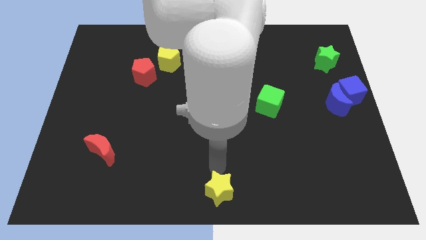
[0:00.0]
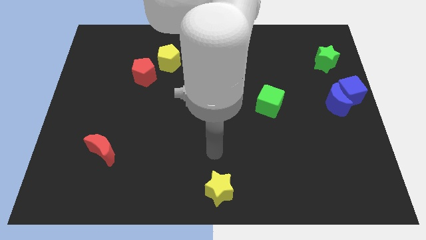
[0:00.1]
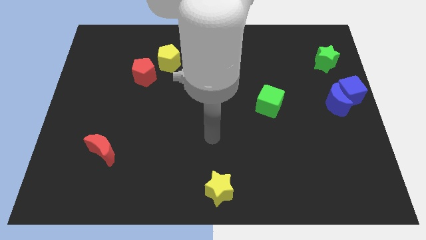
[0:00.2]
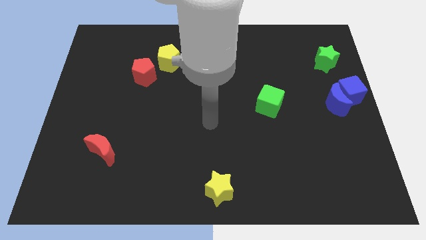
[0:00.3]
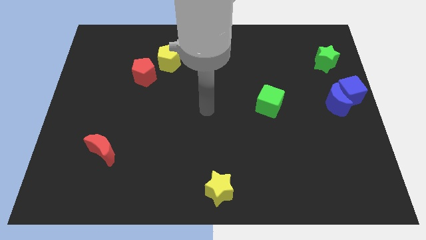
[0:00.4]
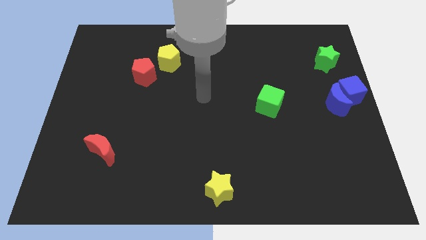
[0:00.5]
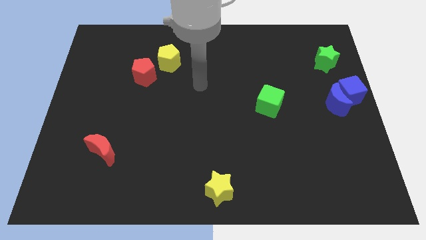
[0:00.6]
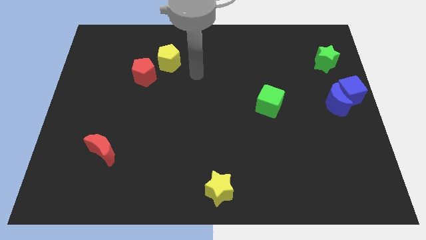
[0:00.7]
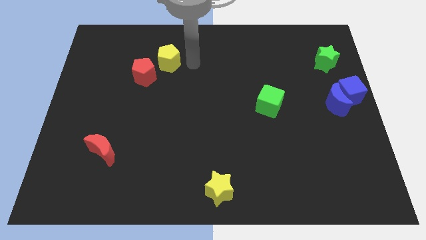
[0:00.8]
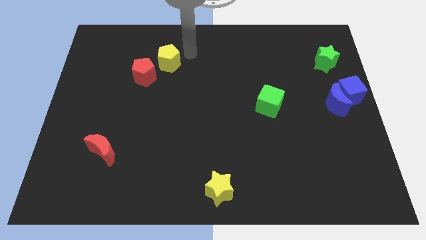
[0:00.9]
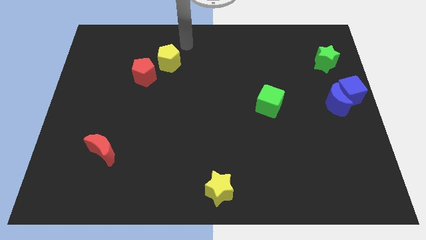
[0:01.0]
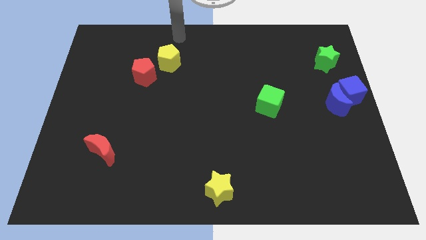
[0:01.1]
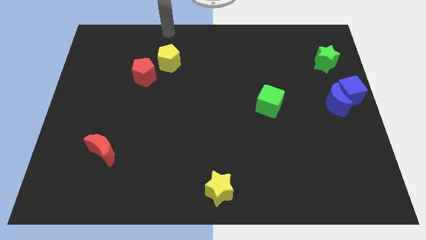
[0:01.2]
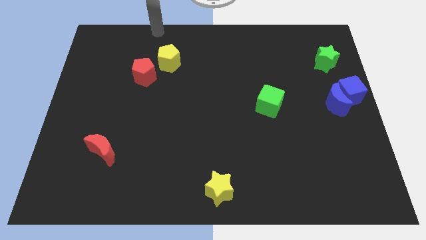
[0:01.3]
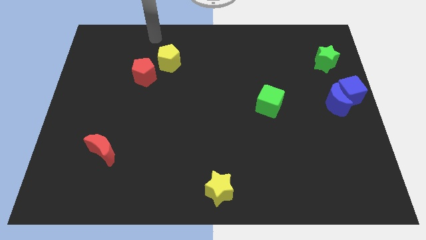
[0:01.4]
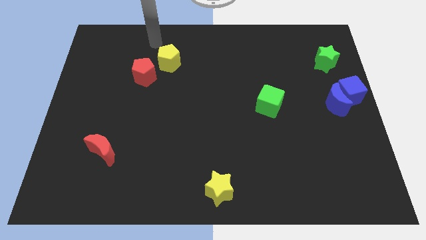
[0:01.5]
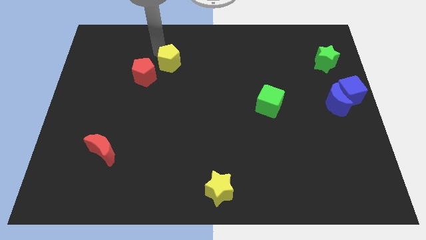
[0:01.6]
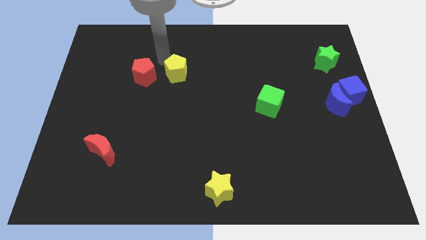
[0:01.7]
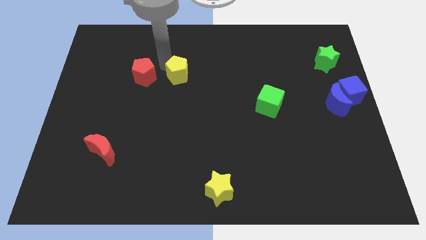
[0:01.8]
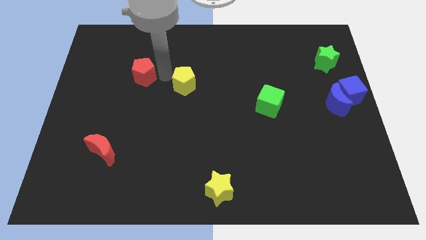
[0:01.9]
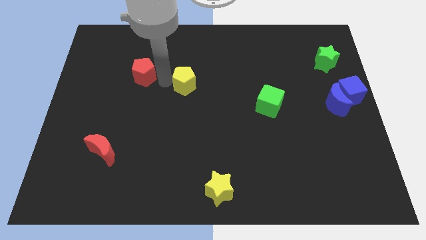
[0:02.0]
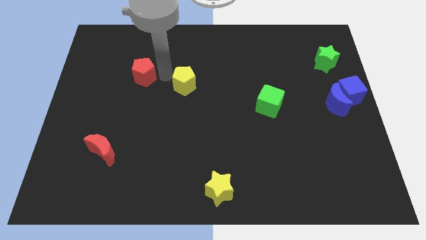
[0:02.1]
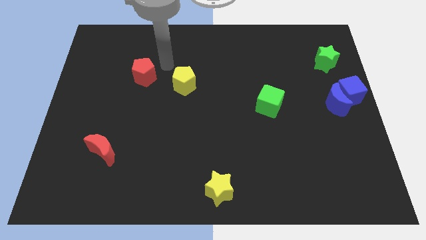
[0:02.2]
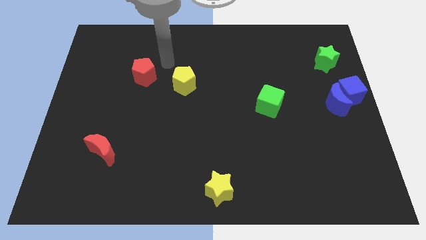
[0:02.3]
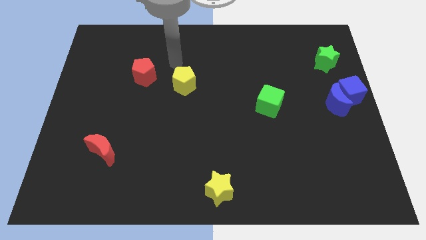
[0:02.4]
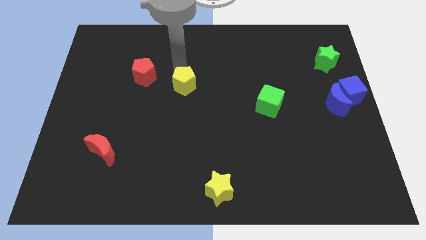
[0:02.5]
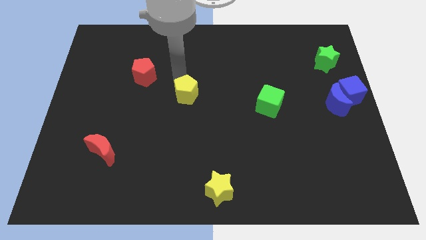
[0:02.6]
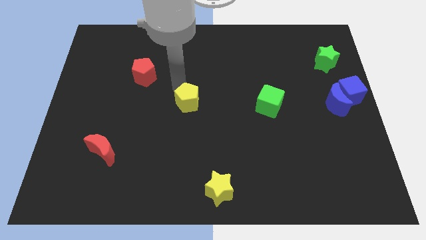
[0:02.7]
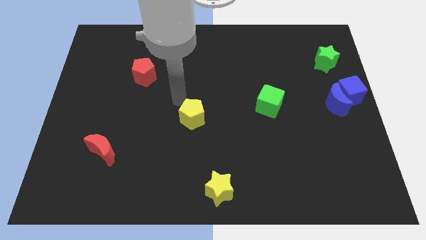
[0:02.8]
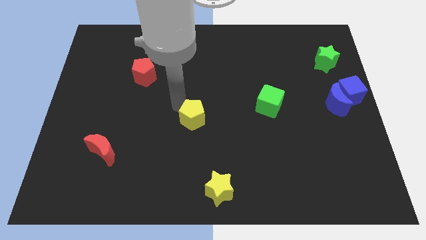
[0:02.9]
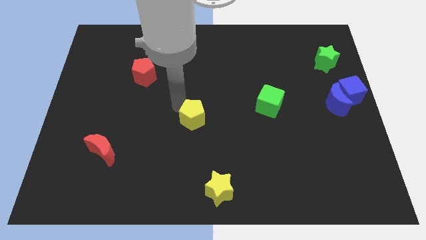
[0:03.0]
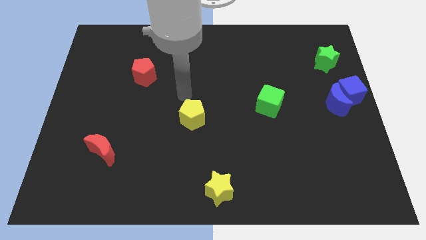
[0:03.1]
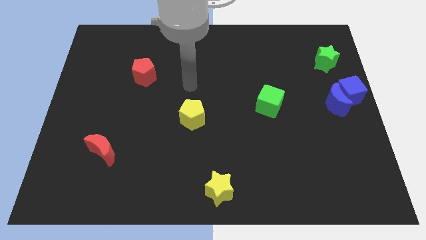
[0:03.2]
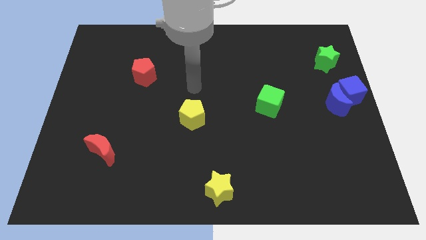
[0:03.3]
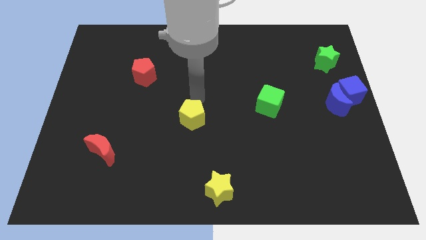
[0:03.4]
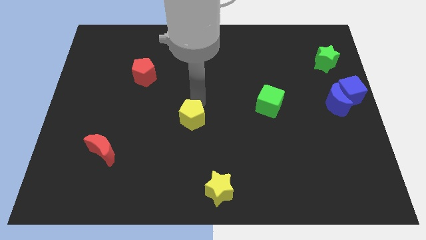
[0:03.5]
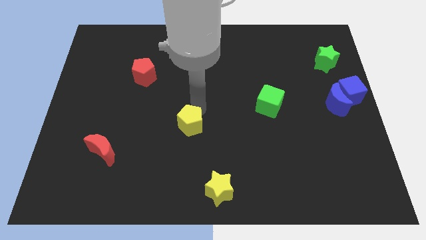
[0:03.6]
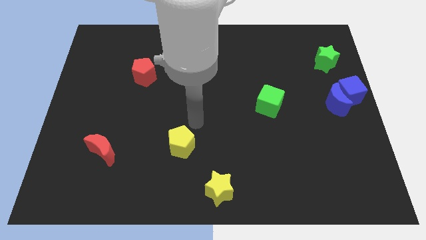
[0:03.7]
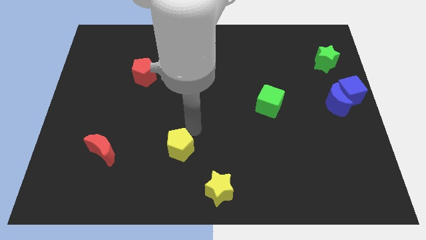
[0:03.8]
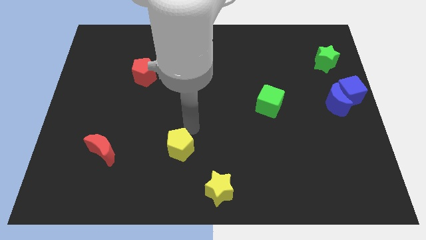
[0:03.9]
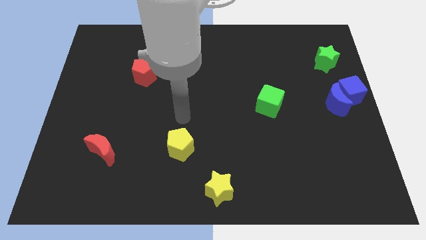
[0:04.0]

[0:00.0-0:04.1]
place the yellow pentagon diagonally above the top left side of the table

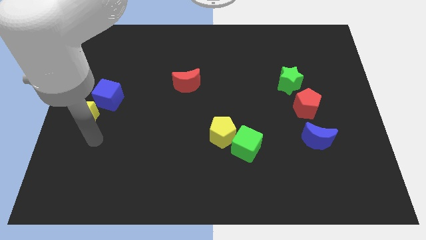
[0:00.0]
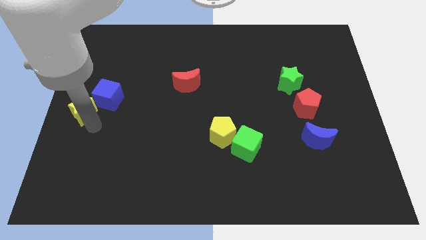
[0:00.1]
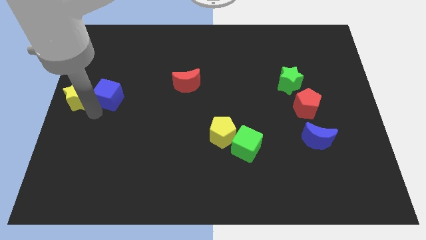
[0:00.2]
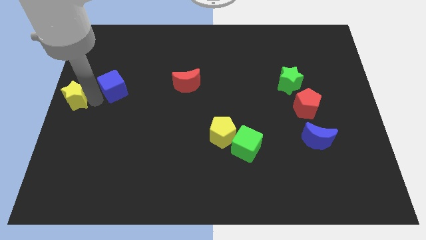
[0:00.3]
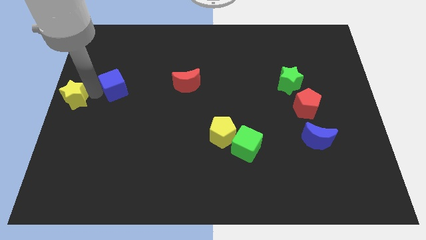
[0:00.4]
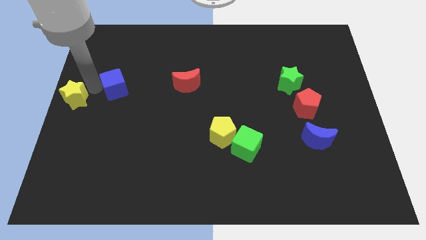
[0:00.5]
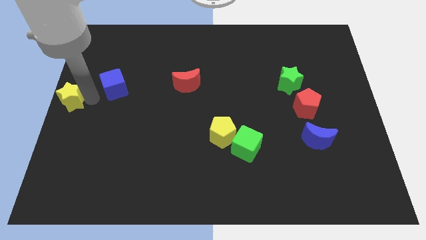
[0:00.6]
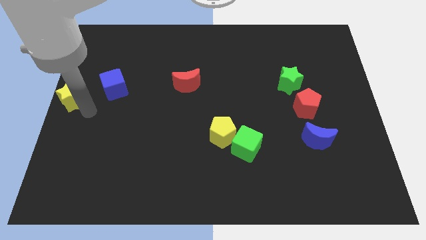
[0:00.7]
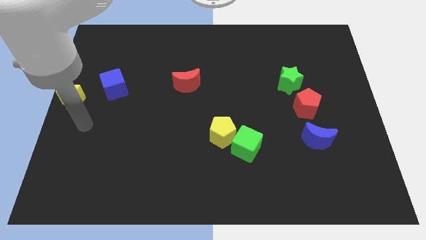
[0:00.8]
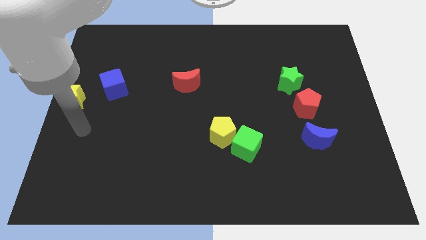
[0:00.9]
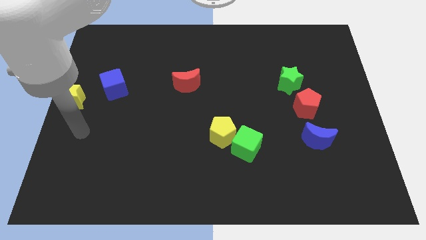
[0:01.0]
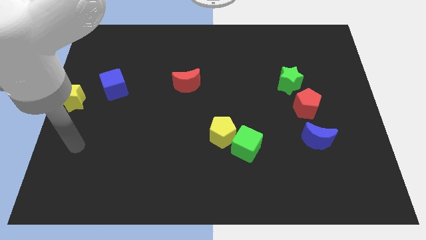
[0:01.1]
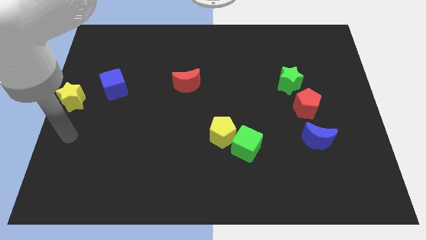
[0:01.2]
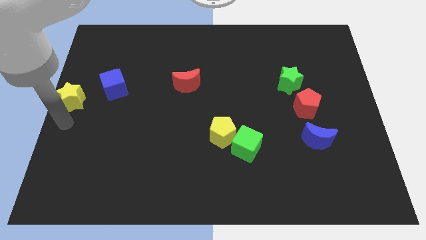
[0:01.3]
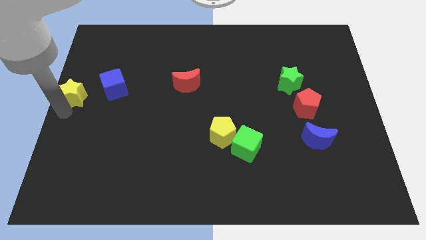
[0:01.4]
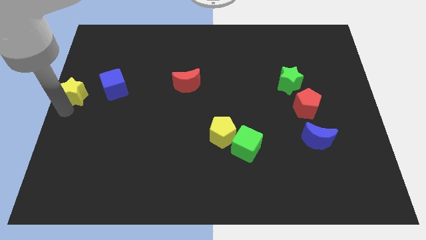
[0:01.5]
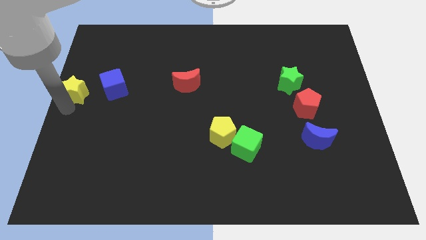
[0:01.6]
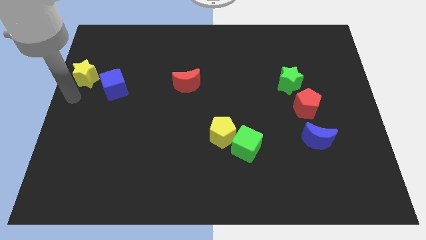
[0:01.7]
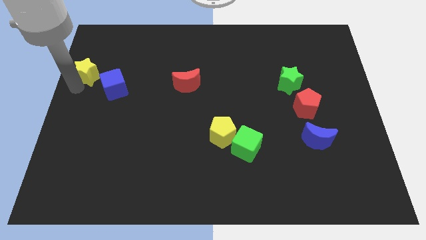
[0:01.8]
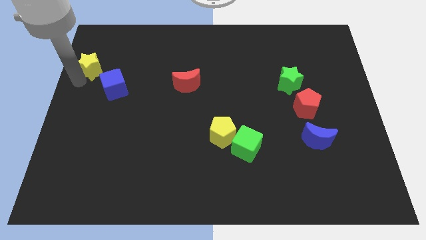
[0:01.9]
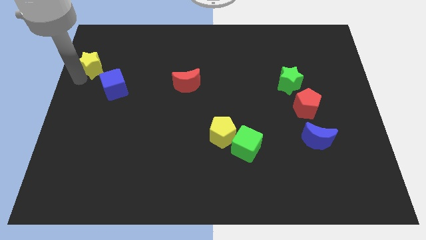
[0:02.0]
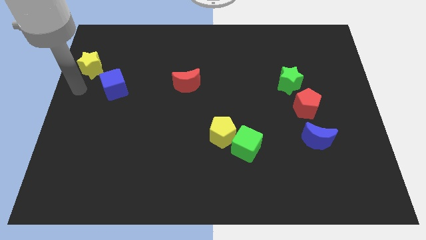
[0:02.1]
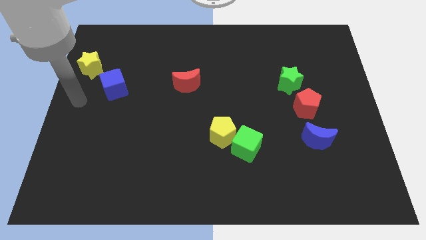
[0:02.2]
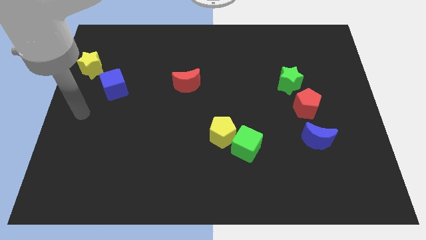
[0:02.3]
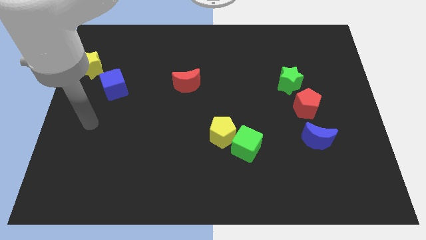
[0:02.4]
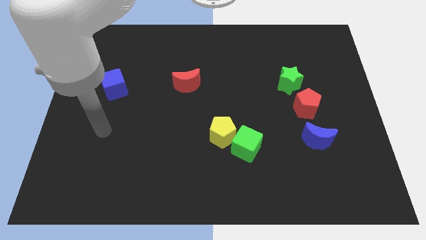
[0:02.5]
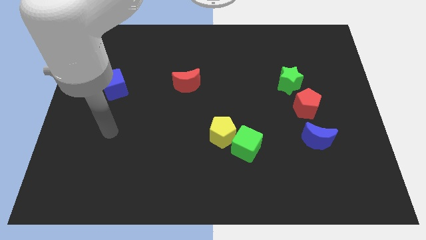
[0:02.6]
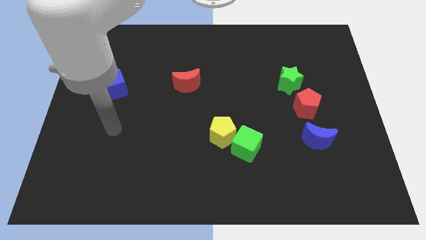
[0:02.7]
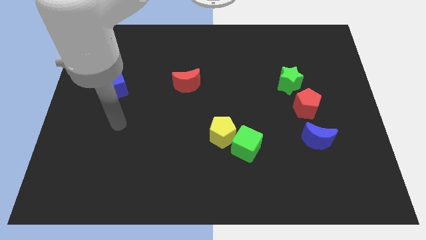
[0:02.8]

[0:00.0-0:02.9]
move the yellow star slightly upwards

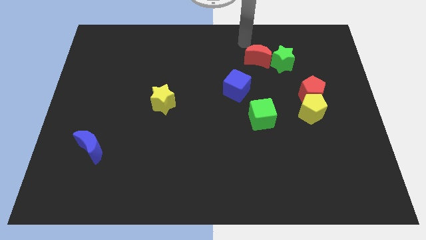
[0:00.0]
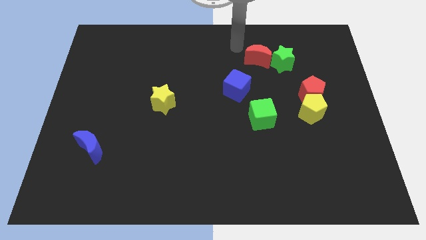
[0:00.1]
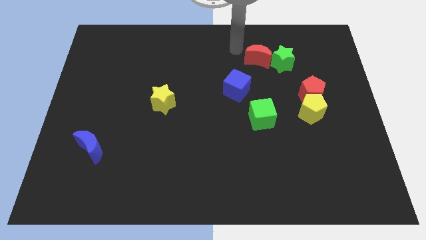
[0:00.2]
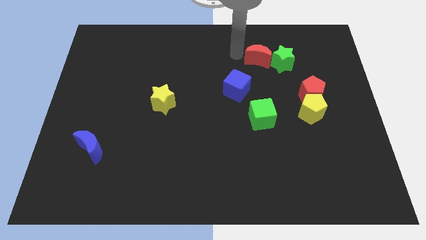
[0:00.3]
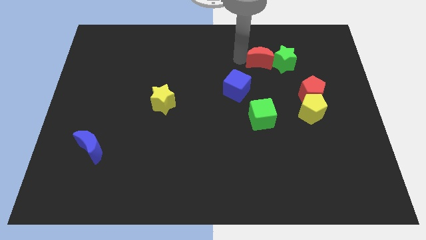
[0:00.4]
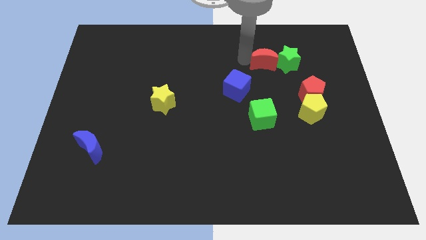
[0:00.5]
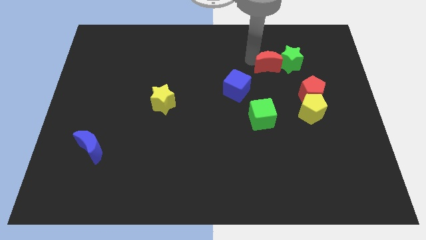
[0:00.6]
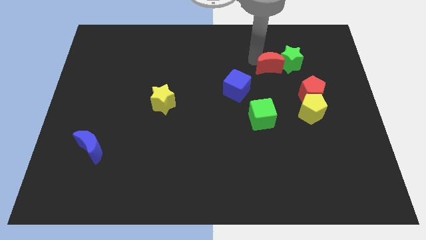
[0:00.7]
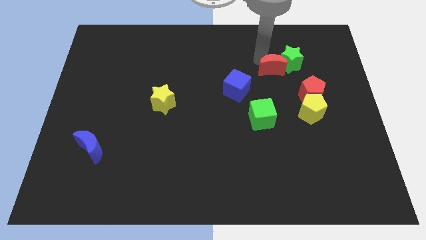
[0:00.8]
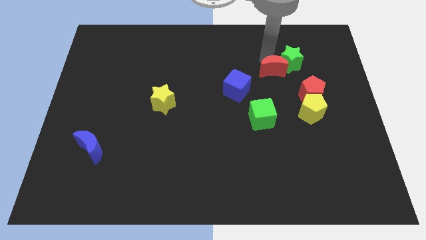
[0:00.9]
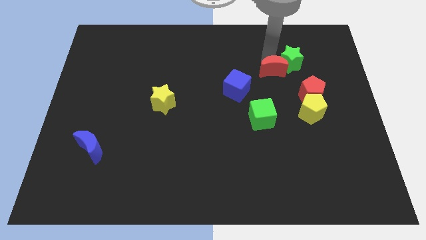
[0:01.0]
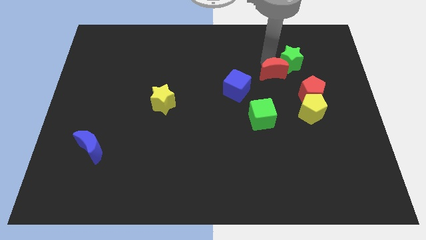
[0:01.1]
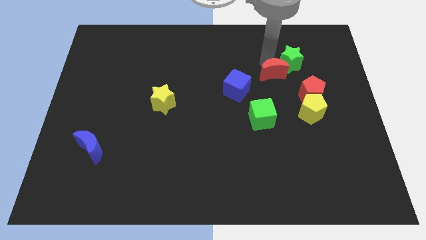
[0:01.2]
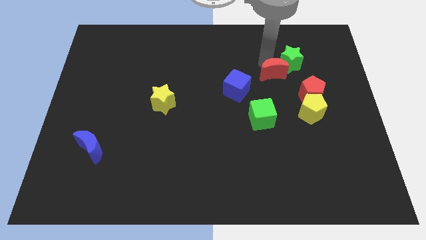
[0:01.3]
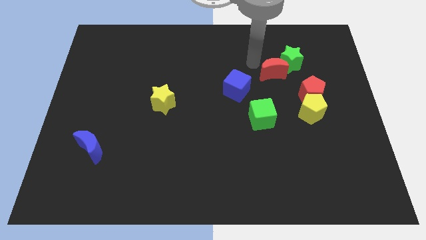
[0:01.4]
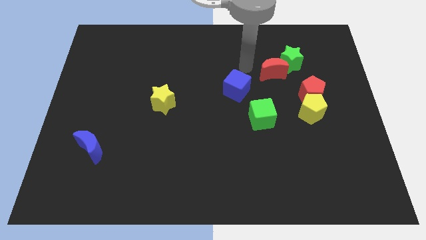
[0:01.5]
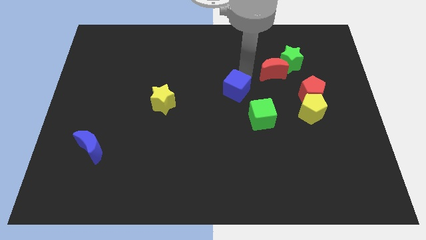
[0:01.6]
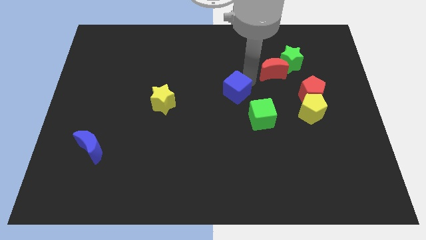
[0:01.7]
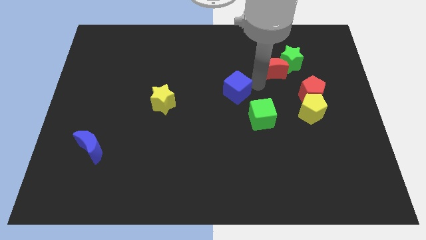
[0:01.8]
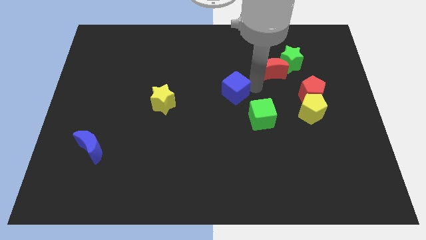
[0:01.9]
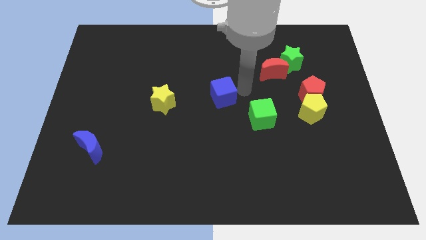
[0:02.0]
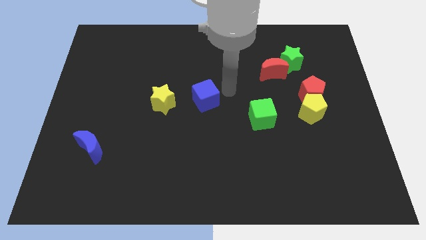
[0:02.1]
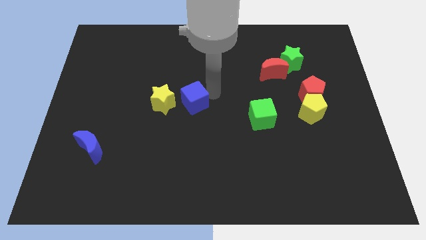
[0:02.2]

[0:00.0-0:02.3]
move the red moon diagonal to the red pentagon
